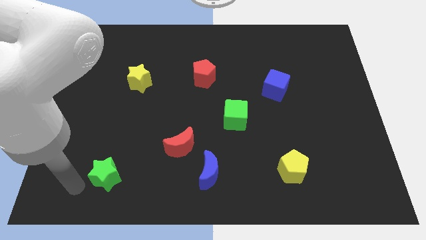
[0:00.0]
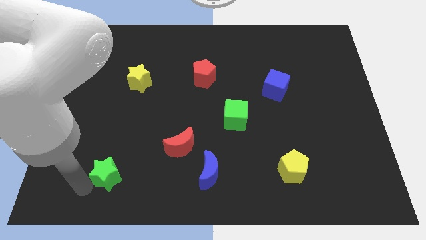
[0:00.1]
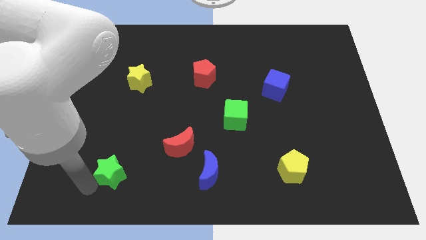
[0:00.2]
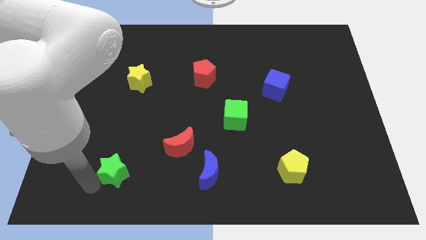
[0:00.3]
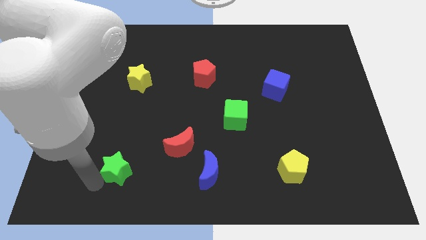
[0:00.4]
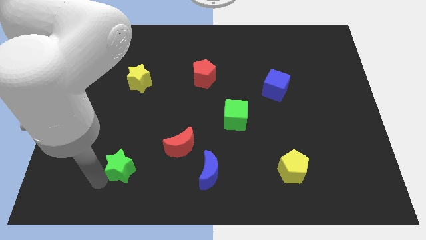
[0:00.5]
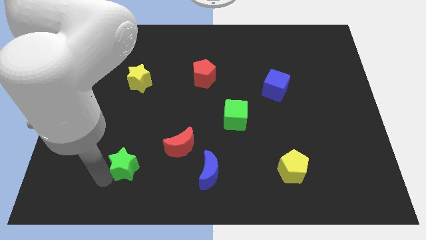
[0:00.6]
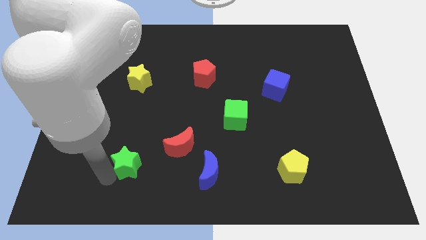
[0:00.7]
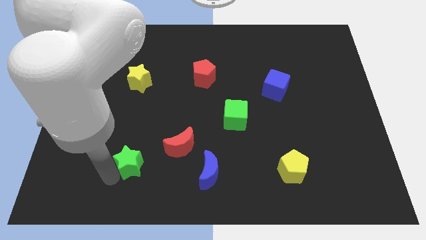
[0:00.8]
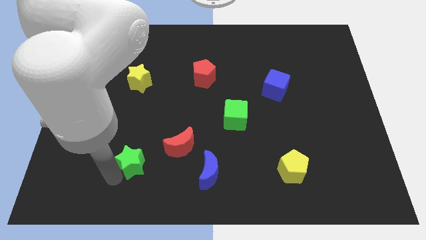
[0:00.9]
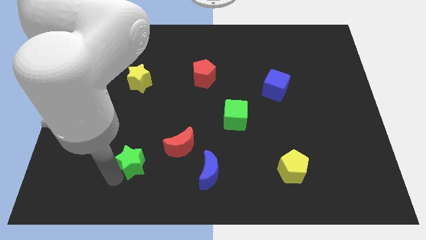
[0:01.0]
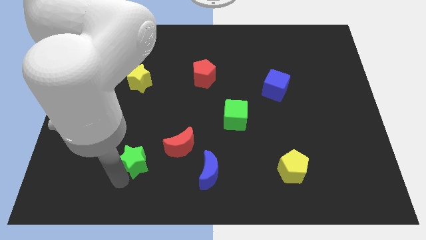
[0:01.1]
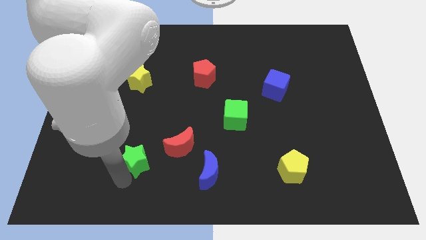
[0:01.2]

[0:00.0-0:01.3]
push green star slightly red crescent

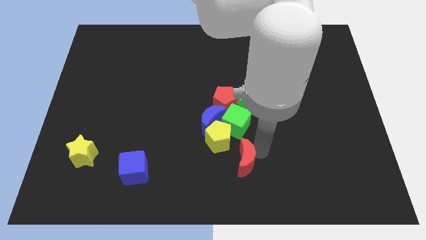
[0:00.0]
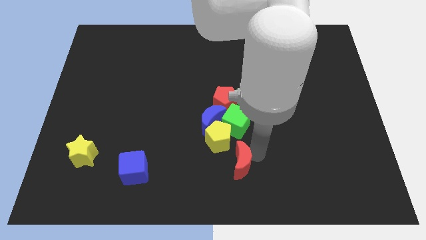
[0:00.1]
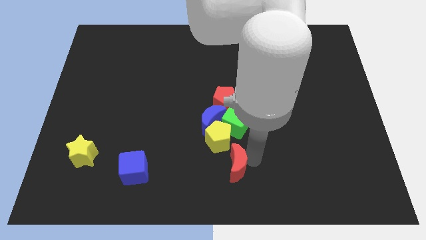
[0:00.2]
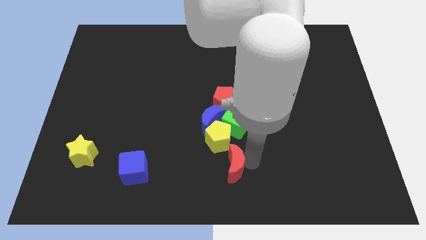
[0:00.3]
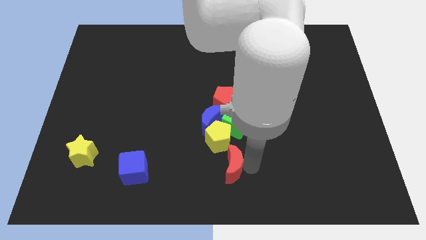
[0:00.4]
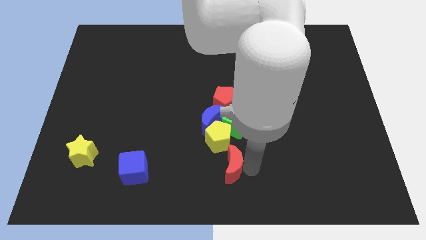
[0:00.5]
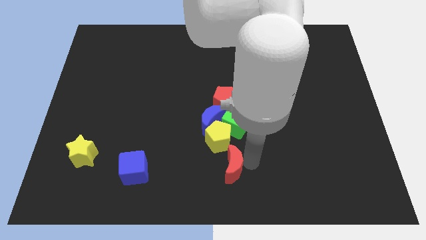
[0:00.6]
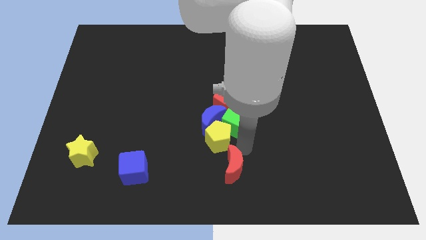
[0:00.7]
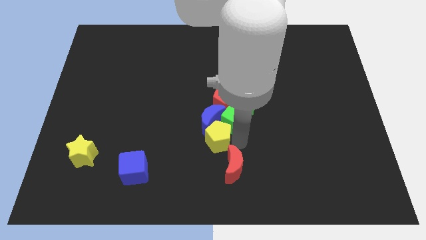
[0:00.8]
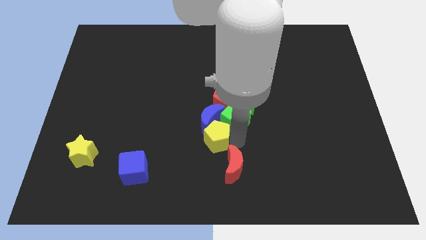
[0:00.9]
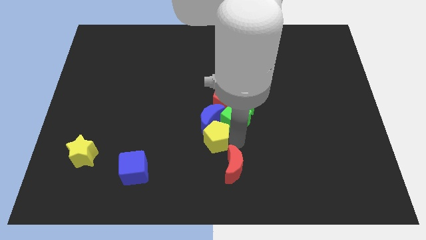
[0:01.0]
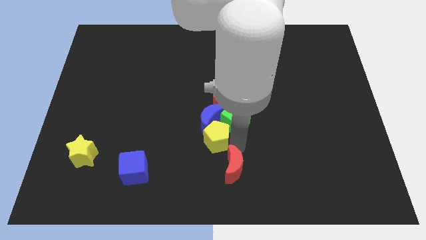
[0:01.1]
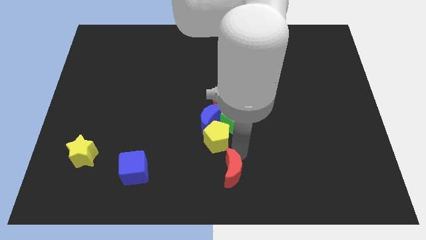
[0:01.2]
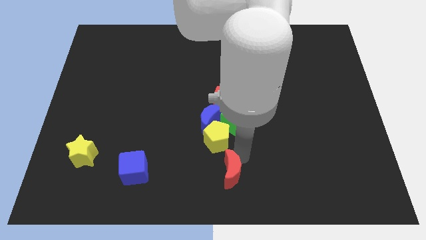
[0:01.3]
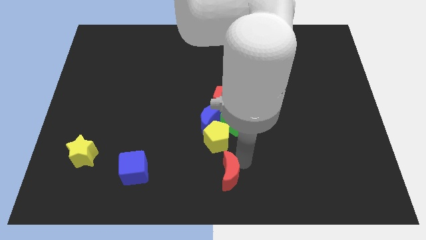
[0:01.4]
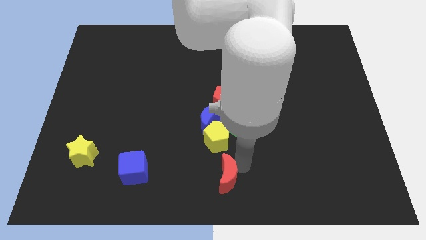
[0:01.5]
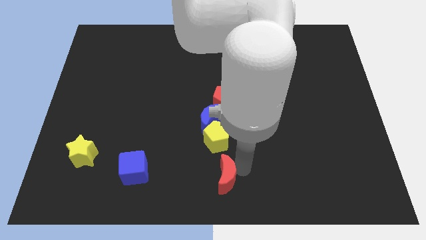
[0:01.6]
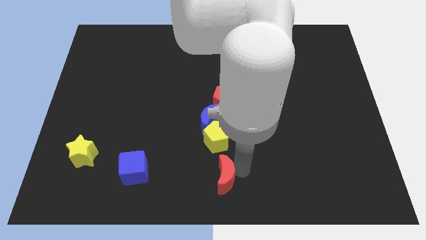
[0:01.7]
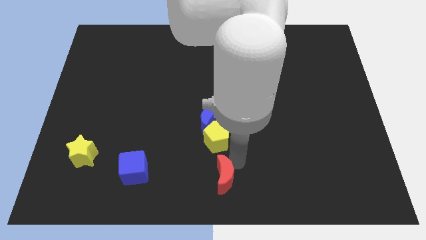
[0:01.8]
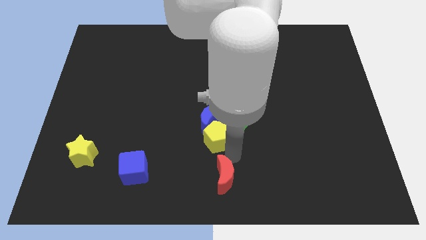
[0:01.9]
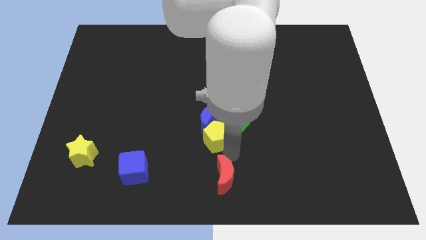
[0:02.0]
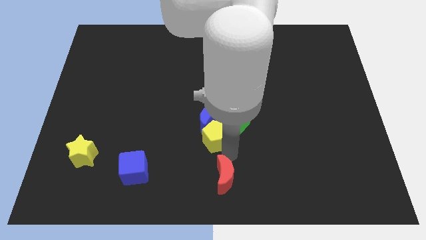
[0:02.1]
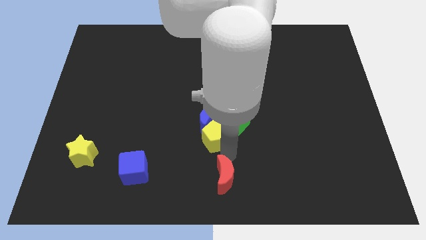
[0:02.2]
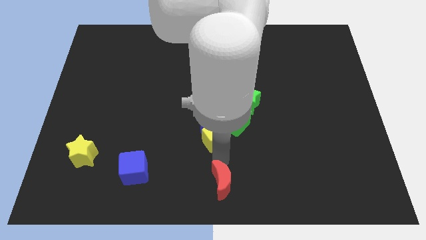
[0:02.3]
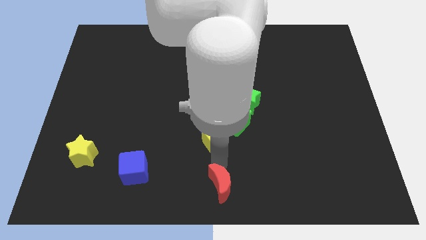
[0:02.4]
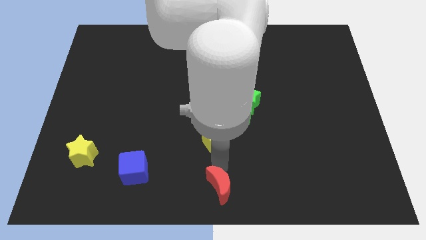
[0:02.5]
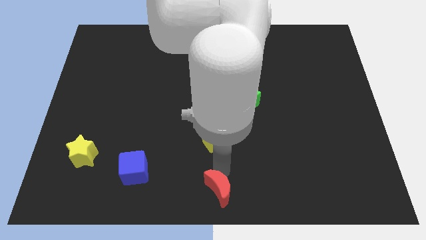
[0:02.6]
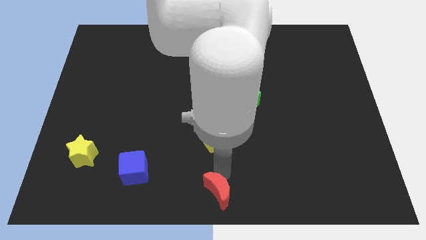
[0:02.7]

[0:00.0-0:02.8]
drag the red moon to bottom center

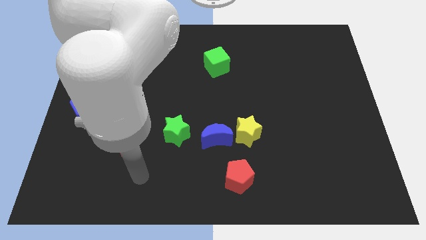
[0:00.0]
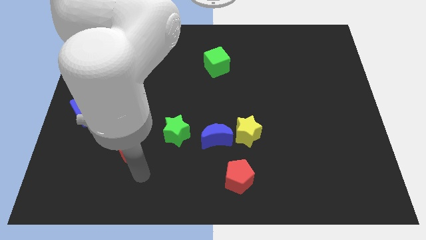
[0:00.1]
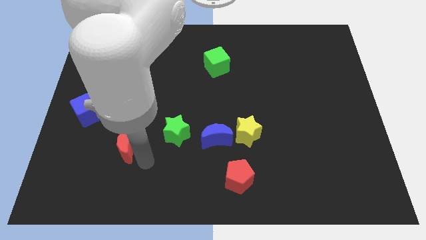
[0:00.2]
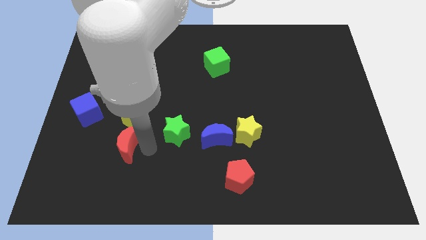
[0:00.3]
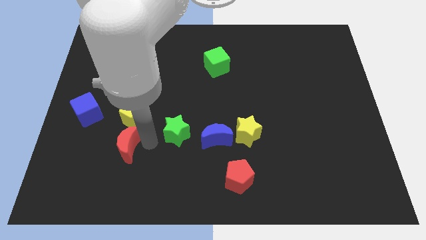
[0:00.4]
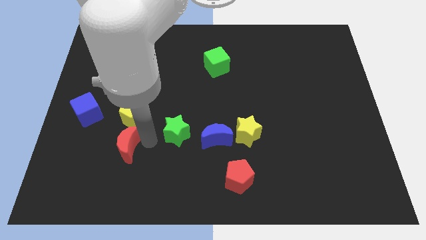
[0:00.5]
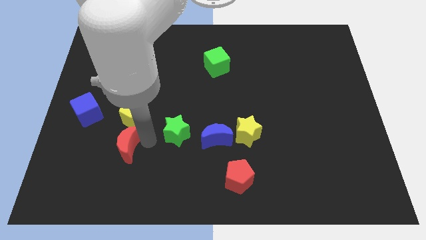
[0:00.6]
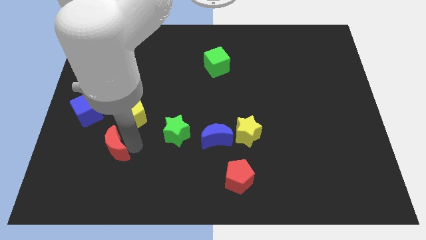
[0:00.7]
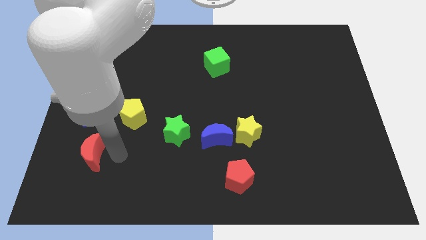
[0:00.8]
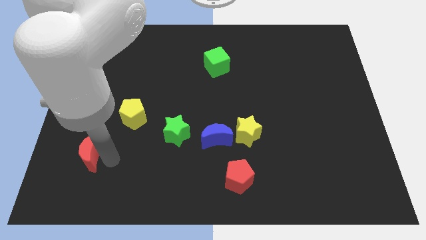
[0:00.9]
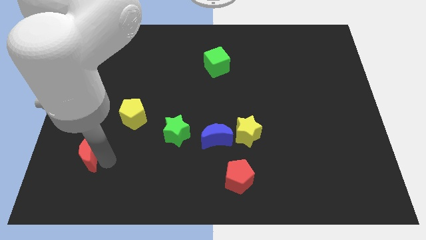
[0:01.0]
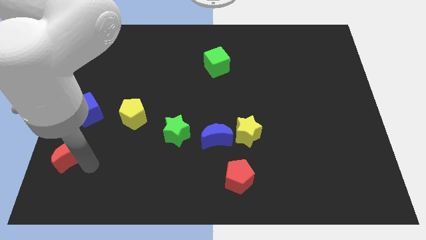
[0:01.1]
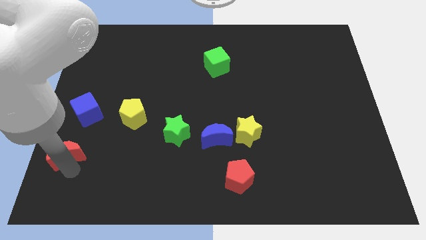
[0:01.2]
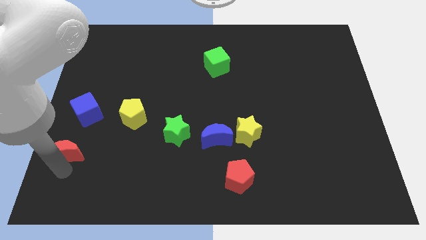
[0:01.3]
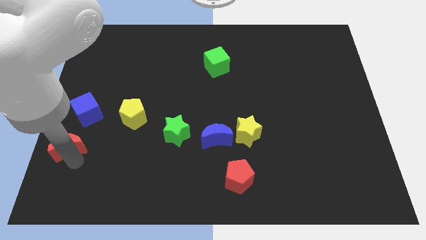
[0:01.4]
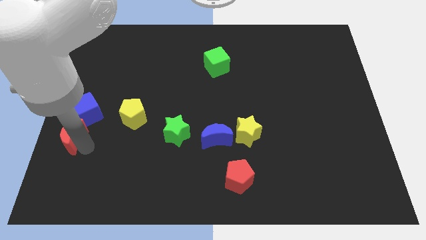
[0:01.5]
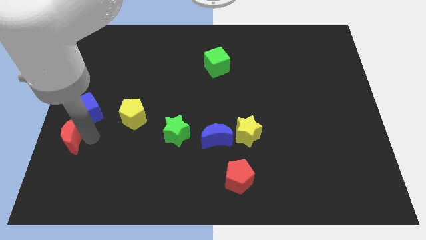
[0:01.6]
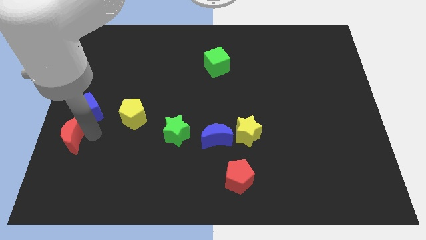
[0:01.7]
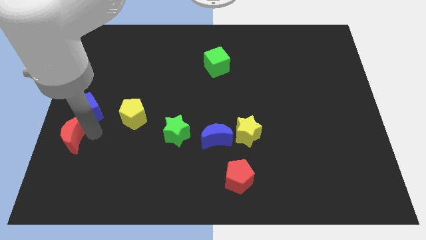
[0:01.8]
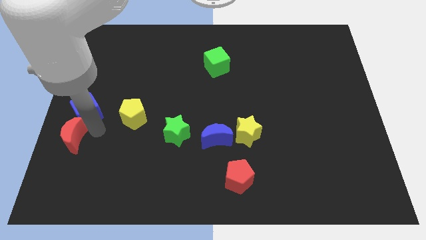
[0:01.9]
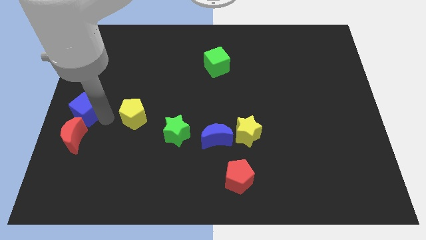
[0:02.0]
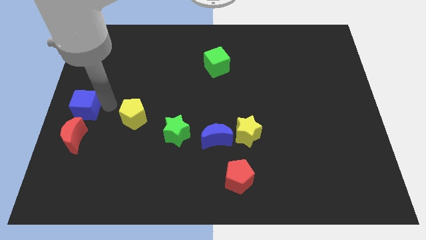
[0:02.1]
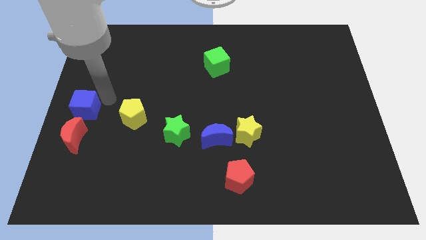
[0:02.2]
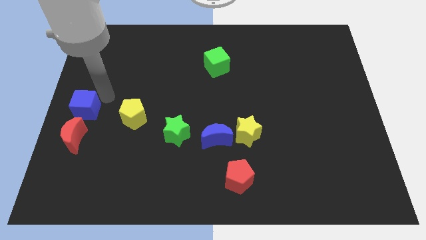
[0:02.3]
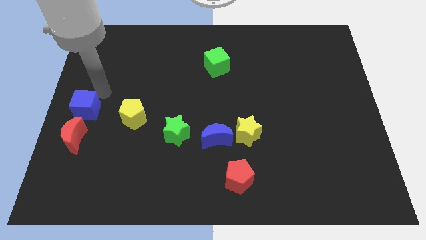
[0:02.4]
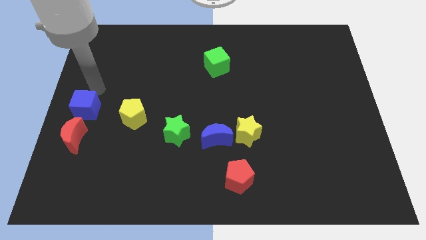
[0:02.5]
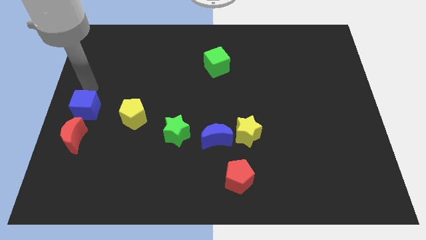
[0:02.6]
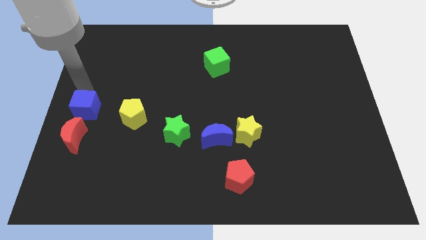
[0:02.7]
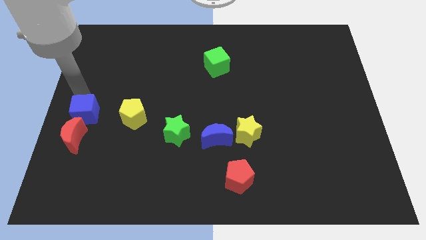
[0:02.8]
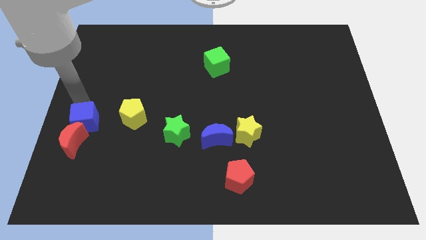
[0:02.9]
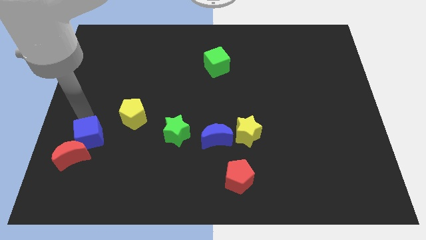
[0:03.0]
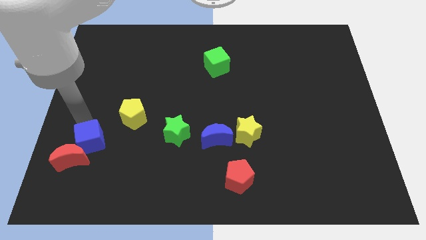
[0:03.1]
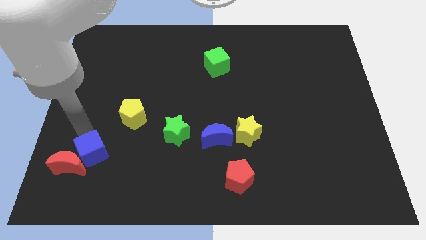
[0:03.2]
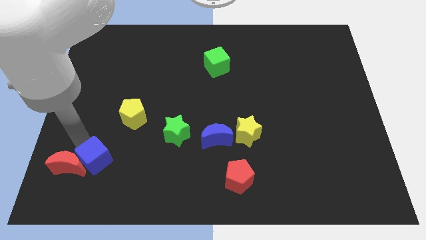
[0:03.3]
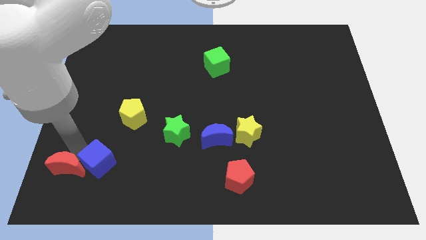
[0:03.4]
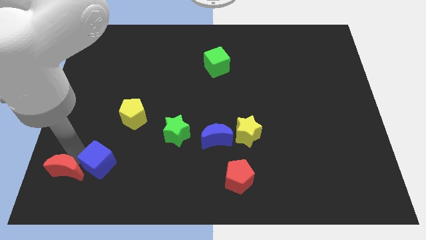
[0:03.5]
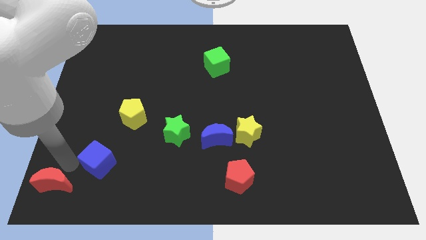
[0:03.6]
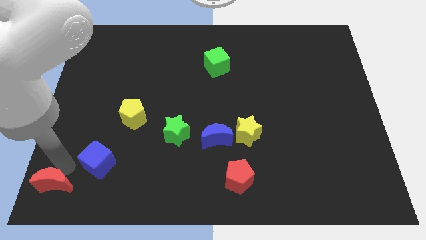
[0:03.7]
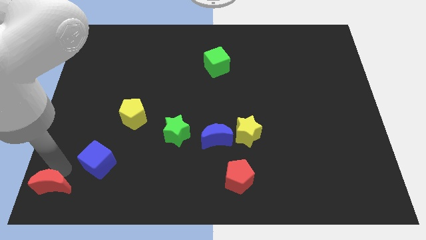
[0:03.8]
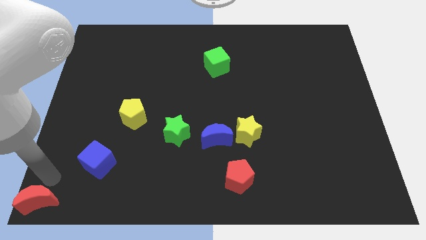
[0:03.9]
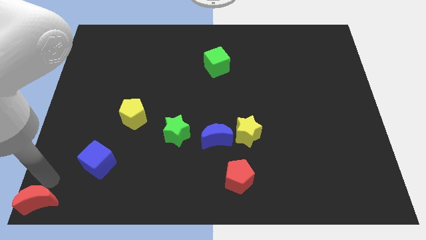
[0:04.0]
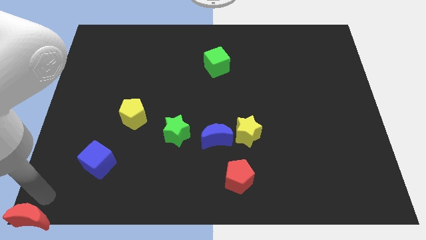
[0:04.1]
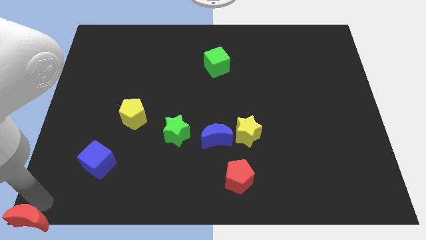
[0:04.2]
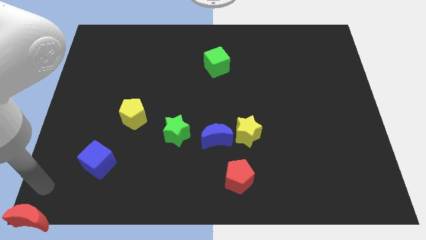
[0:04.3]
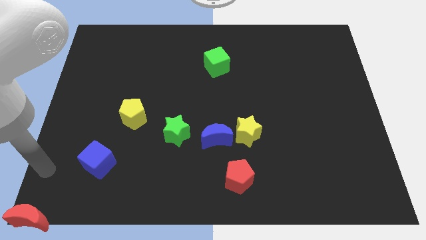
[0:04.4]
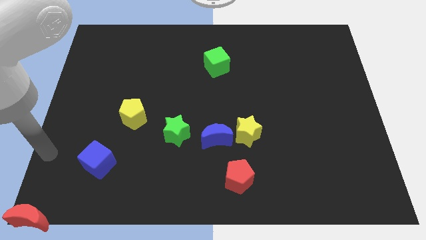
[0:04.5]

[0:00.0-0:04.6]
push the red crescent to the left bottom corner of the board

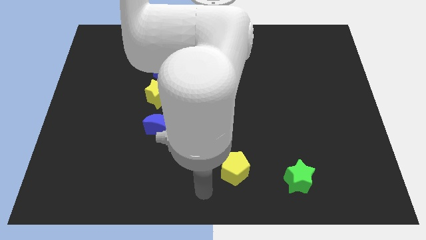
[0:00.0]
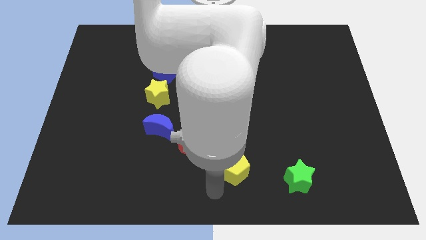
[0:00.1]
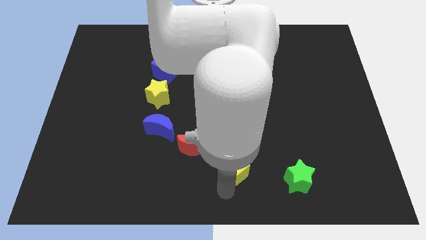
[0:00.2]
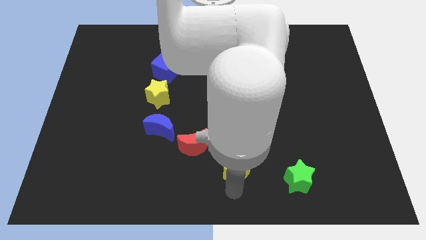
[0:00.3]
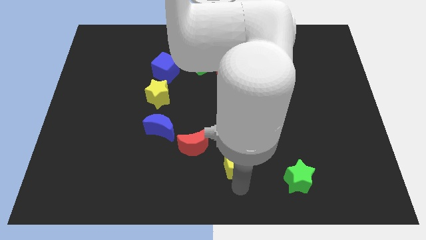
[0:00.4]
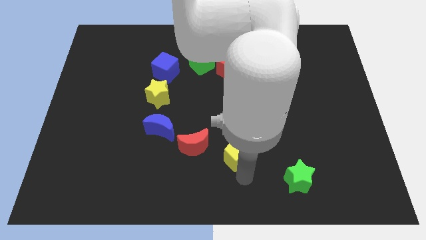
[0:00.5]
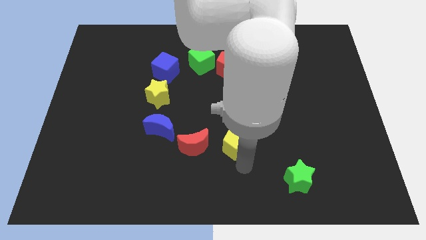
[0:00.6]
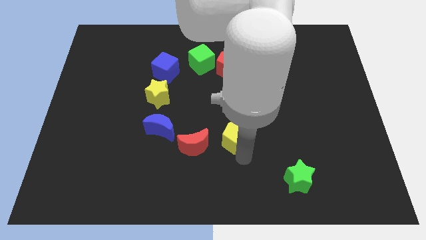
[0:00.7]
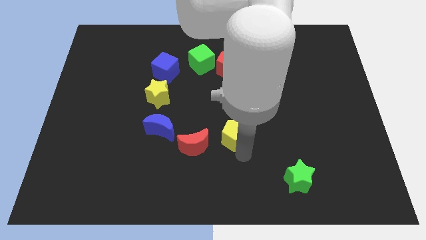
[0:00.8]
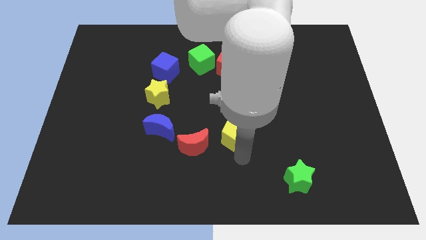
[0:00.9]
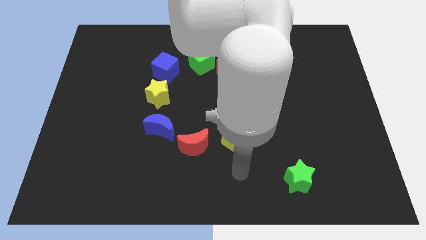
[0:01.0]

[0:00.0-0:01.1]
move the yellow pentagon parallel to the right side of the red crescent
